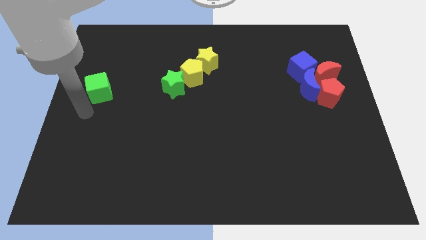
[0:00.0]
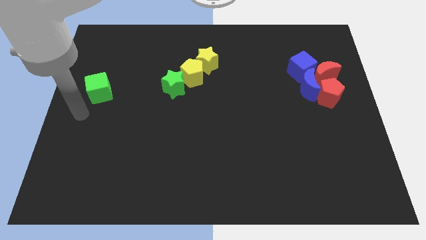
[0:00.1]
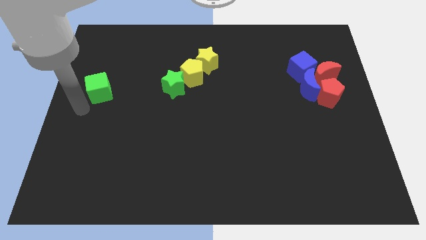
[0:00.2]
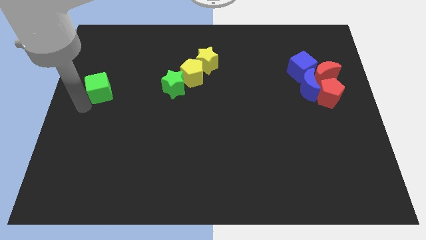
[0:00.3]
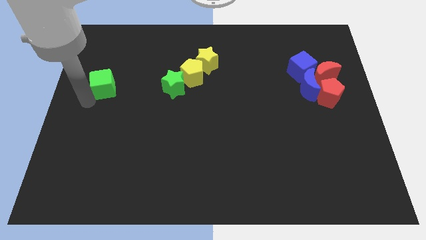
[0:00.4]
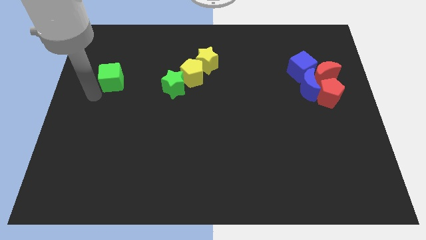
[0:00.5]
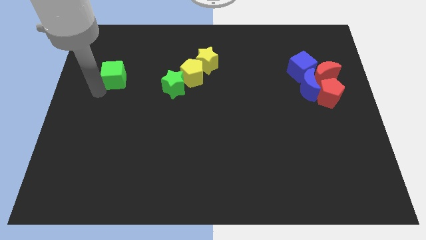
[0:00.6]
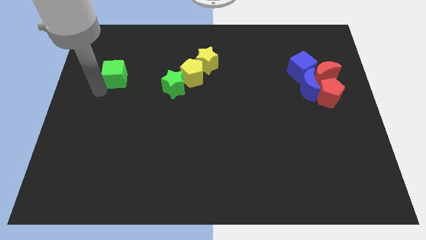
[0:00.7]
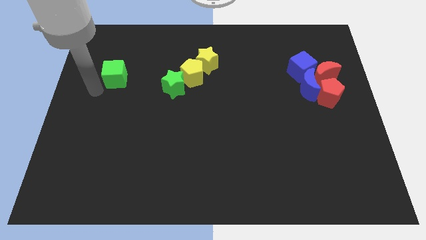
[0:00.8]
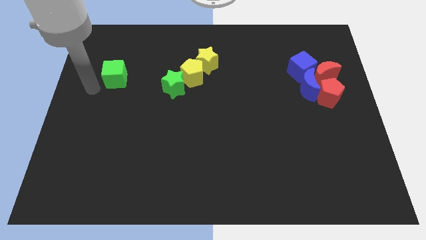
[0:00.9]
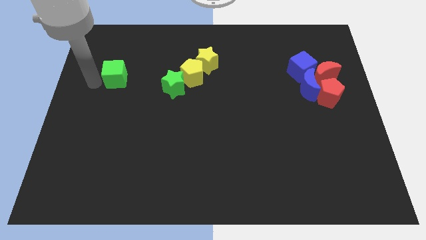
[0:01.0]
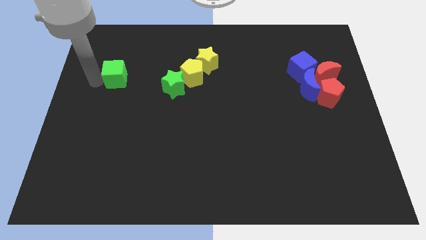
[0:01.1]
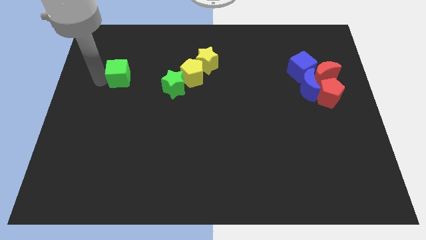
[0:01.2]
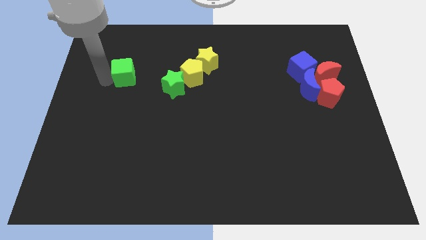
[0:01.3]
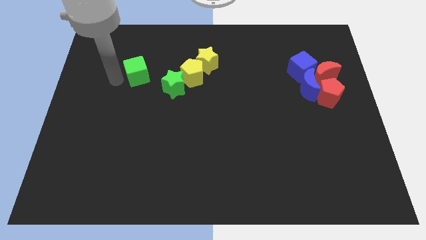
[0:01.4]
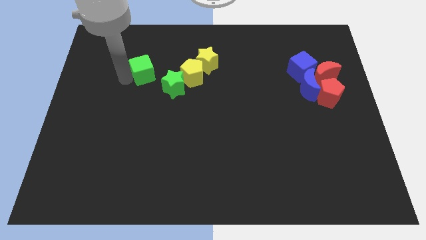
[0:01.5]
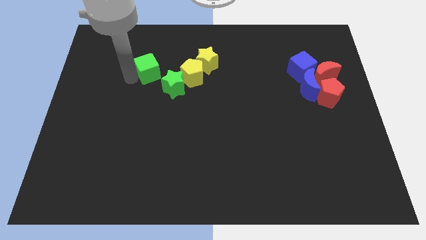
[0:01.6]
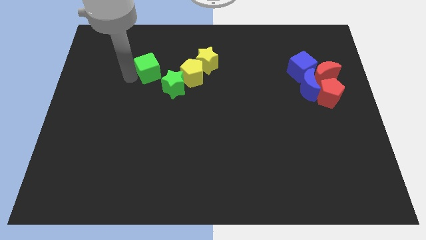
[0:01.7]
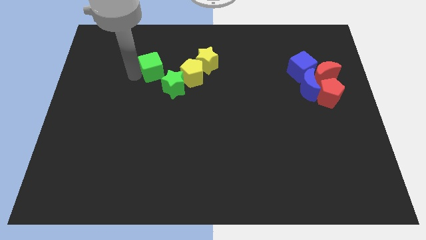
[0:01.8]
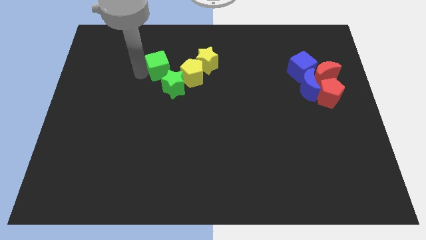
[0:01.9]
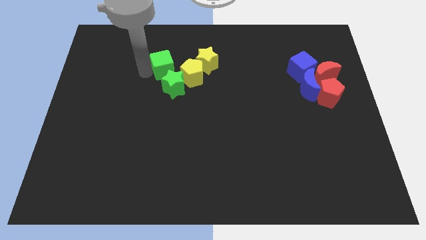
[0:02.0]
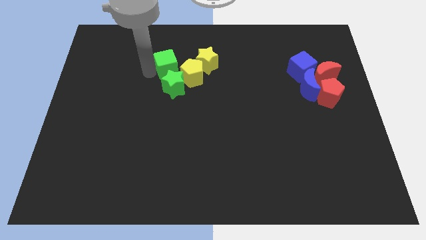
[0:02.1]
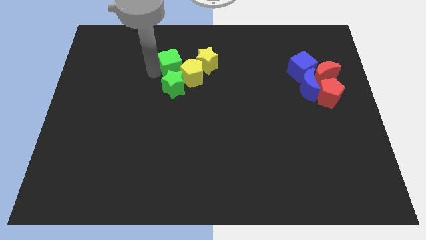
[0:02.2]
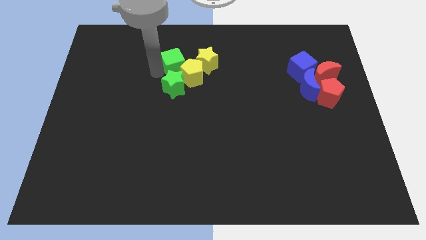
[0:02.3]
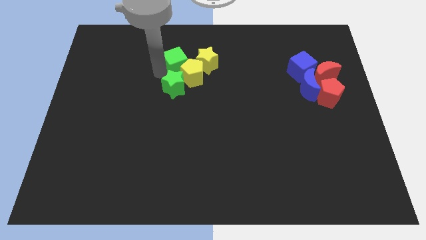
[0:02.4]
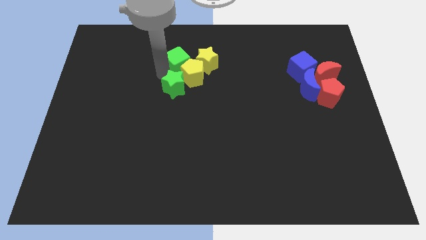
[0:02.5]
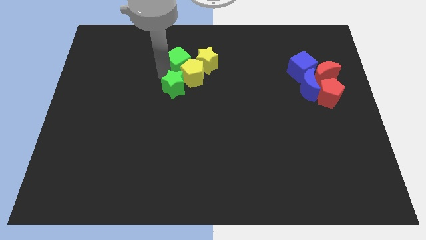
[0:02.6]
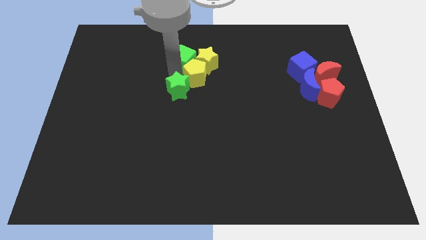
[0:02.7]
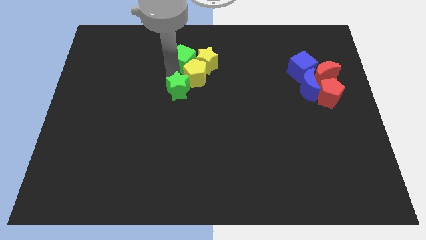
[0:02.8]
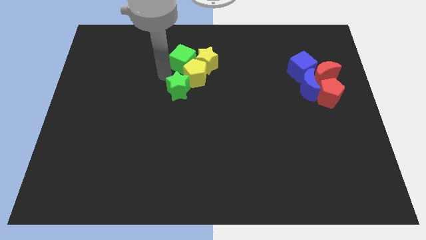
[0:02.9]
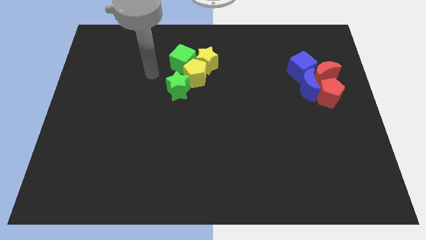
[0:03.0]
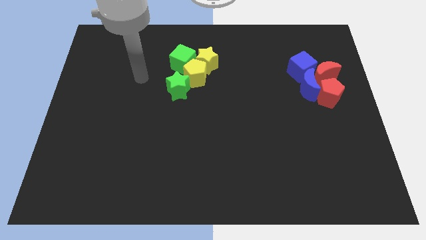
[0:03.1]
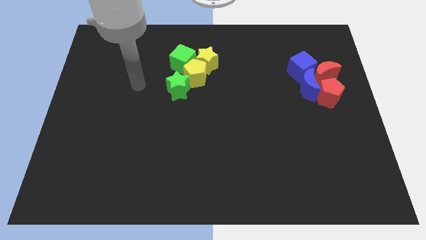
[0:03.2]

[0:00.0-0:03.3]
move the green cube into the yellow pentagon

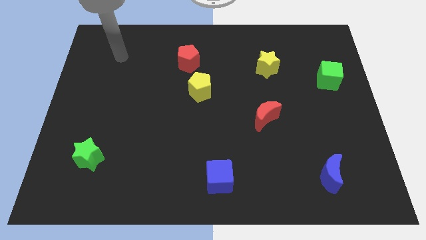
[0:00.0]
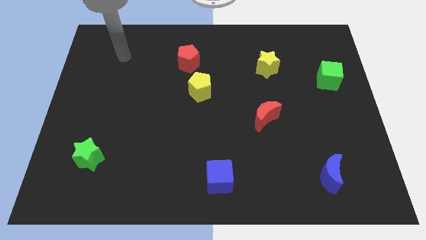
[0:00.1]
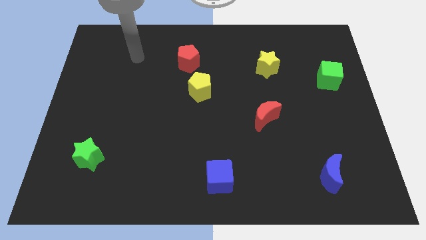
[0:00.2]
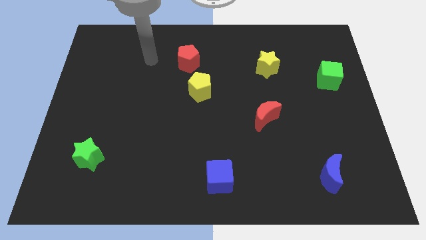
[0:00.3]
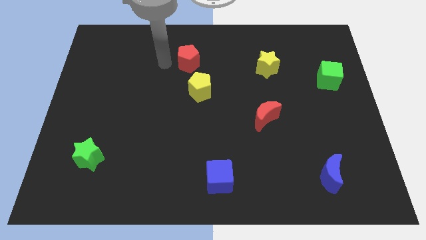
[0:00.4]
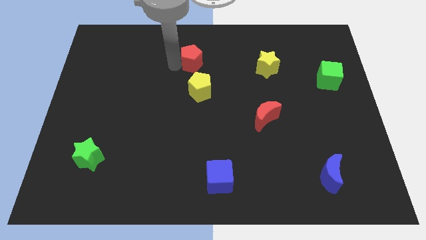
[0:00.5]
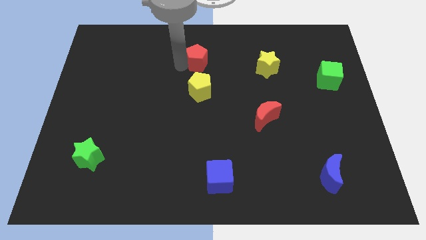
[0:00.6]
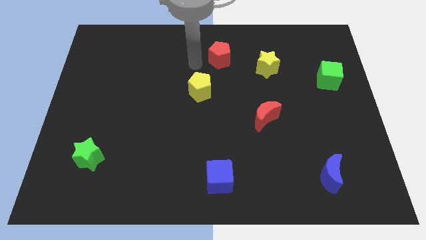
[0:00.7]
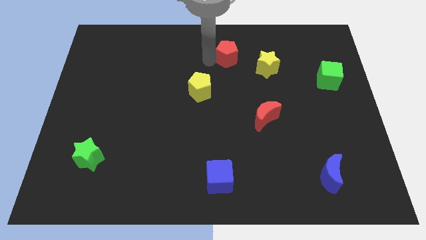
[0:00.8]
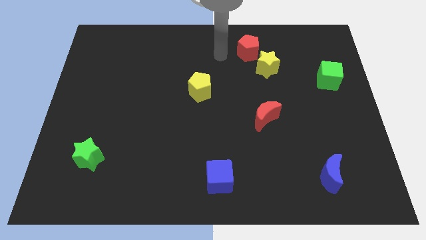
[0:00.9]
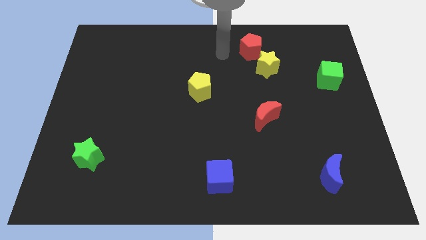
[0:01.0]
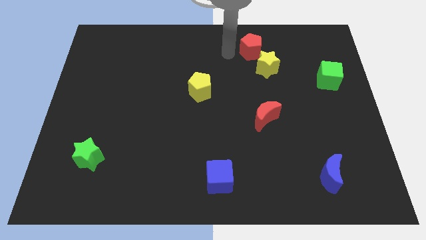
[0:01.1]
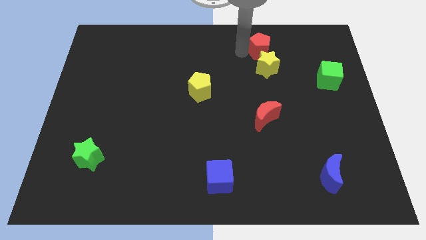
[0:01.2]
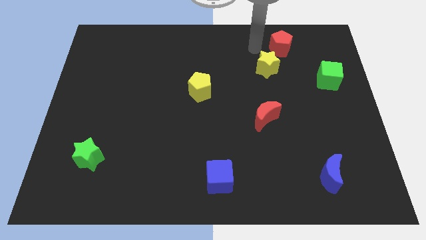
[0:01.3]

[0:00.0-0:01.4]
move the red pentagon to the top right side of the yellow star

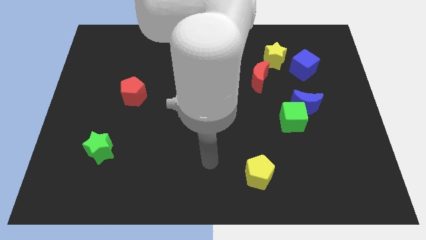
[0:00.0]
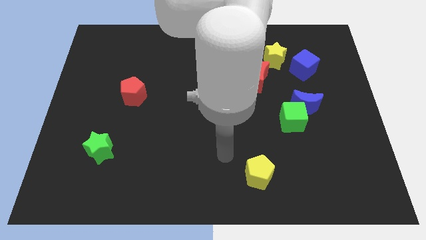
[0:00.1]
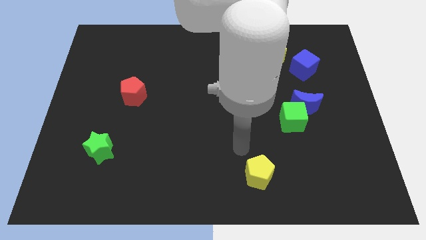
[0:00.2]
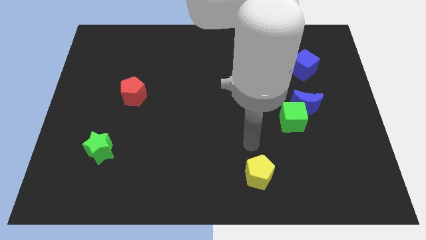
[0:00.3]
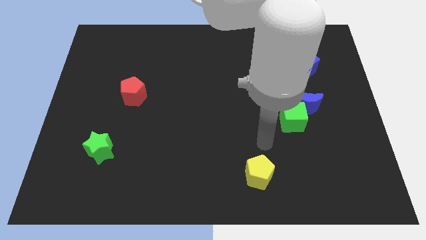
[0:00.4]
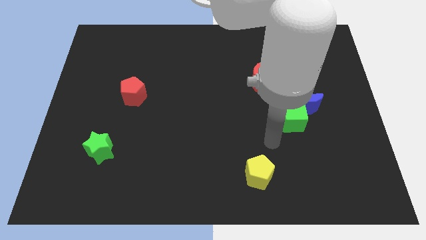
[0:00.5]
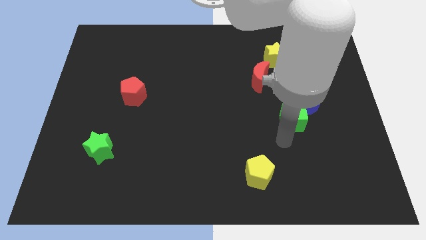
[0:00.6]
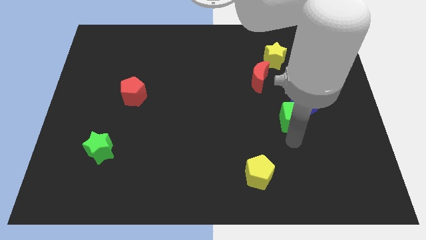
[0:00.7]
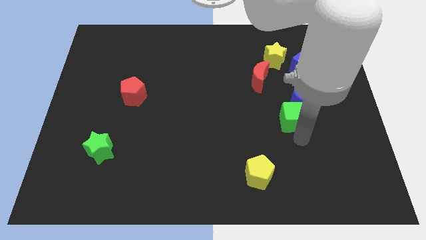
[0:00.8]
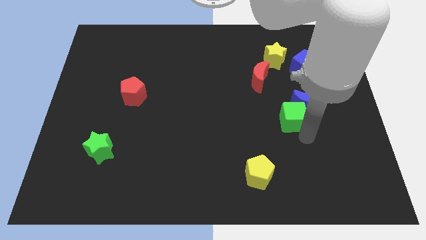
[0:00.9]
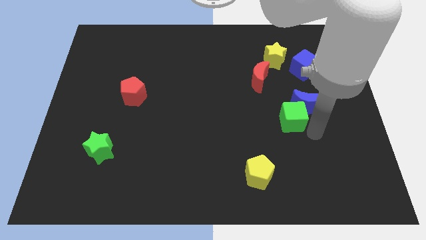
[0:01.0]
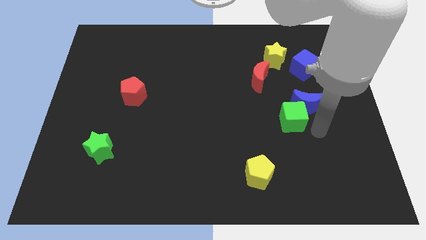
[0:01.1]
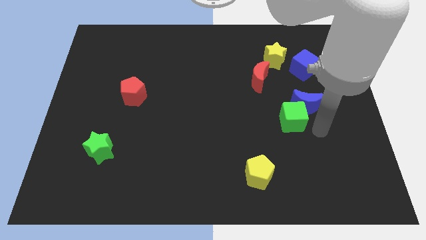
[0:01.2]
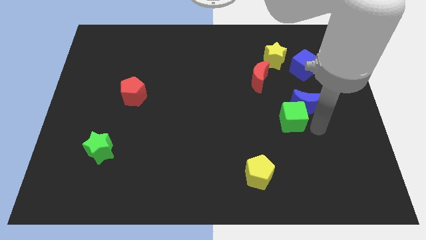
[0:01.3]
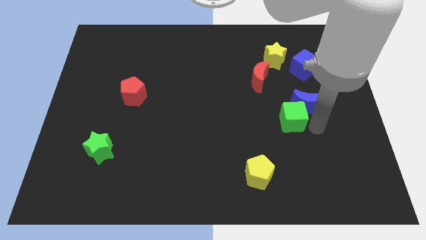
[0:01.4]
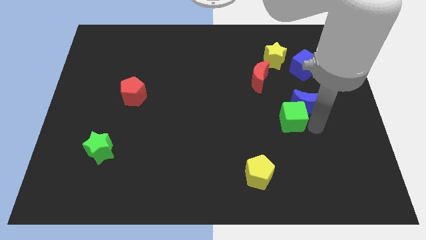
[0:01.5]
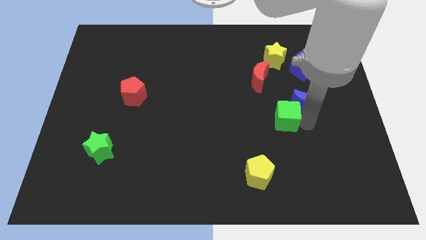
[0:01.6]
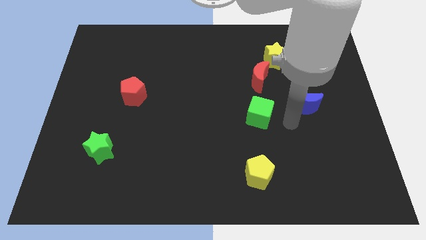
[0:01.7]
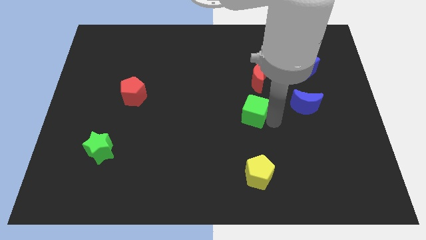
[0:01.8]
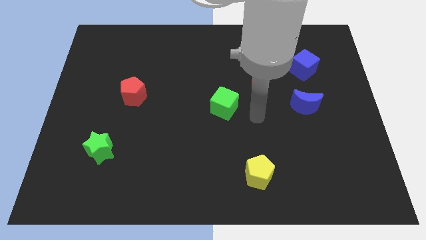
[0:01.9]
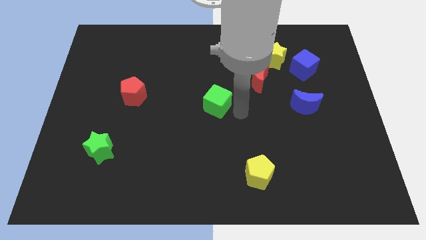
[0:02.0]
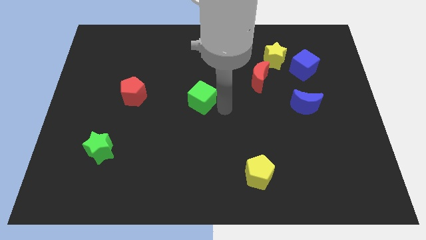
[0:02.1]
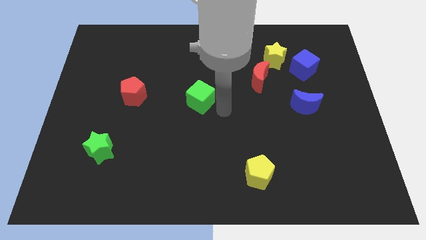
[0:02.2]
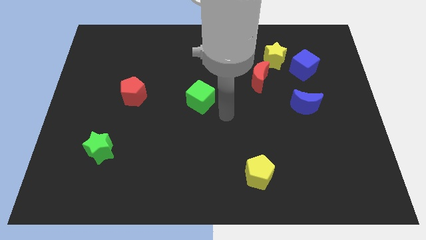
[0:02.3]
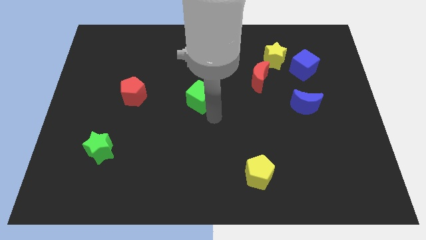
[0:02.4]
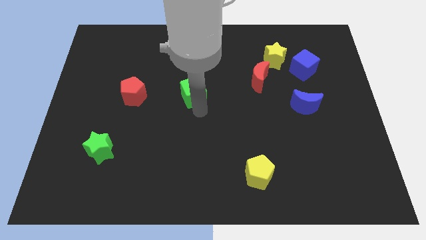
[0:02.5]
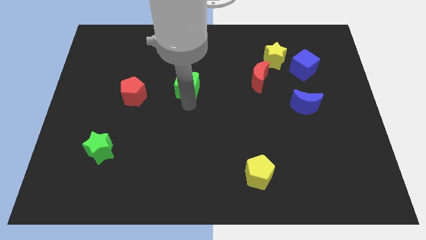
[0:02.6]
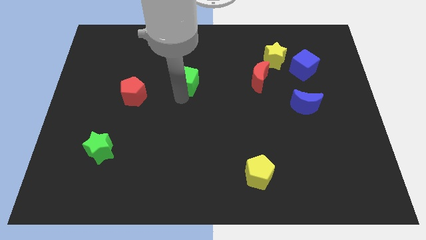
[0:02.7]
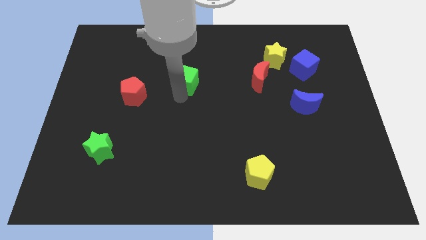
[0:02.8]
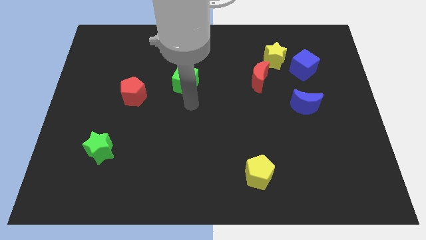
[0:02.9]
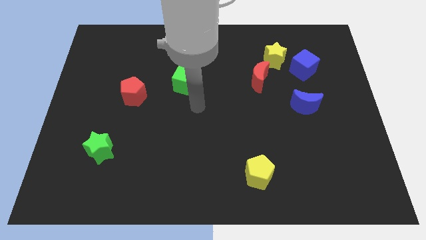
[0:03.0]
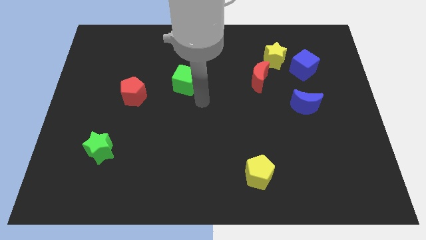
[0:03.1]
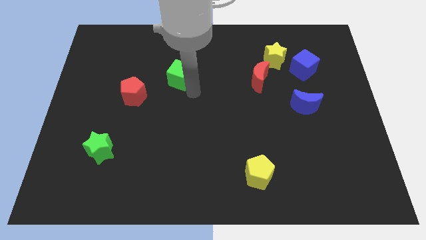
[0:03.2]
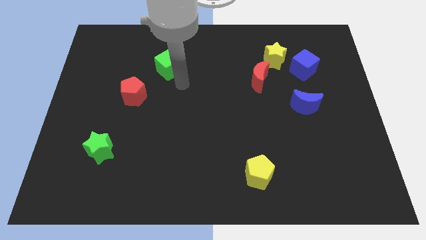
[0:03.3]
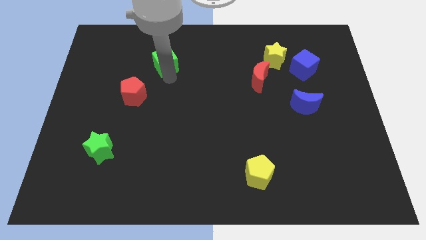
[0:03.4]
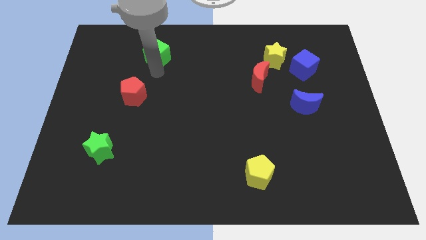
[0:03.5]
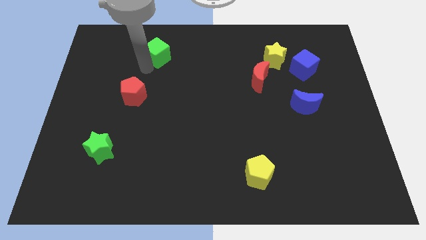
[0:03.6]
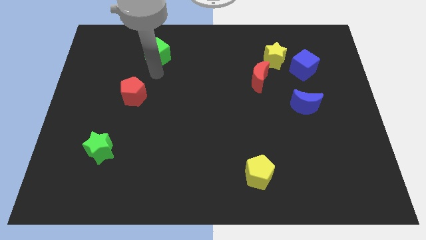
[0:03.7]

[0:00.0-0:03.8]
move the green cube towards the top left of the board

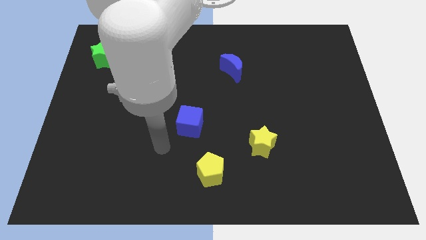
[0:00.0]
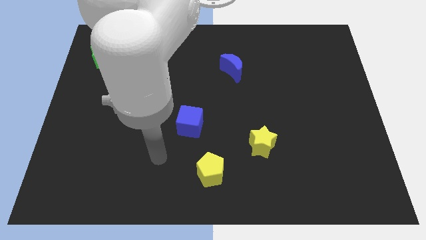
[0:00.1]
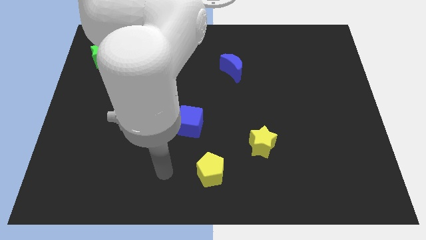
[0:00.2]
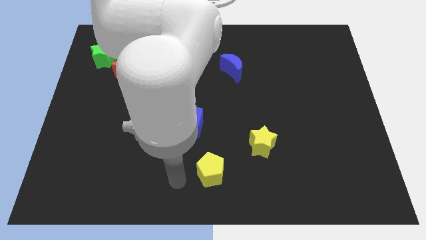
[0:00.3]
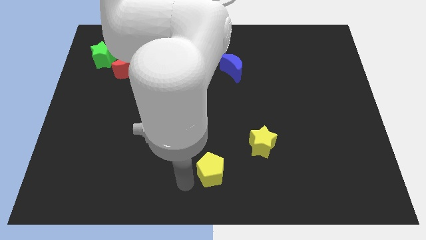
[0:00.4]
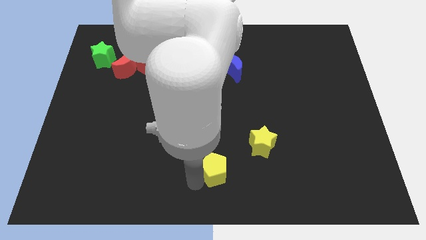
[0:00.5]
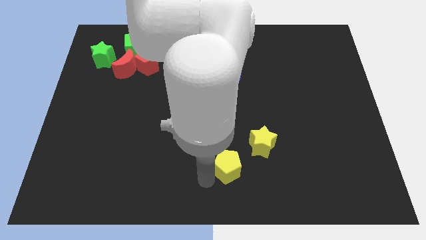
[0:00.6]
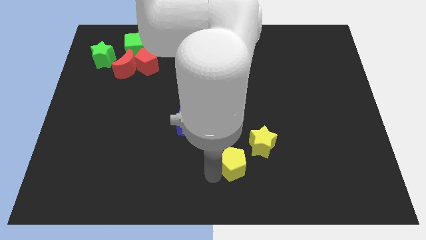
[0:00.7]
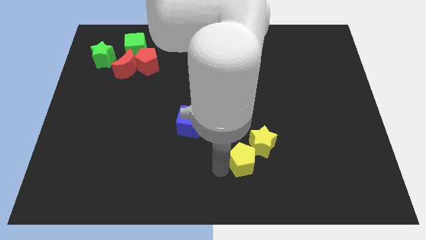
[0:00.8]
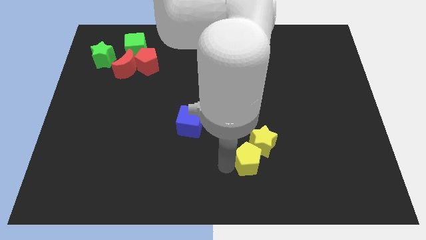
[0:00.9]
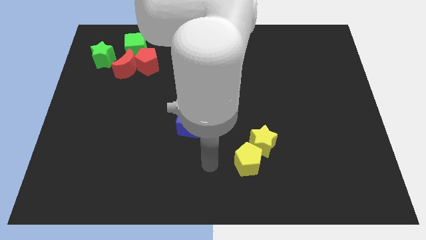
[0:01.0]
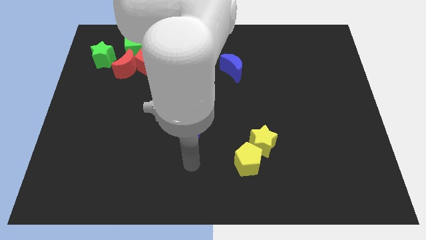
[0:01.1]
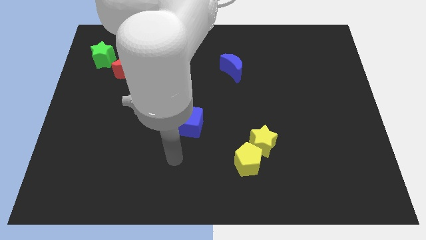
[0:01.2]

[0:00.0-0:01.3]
push the yellow pentagon into the yellow star
